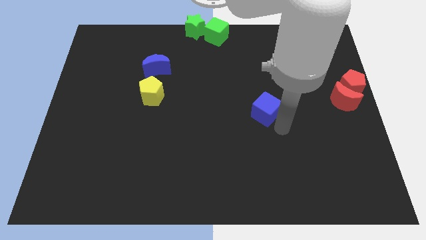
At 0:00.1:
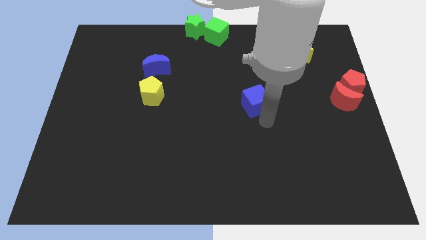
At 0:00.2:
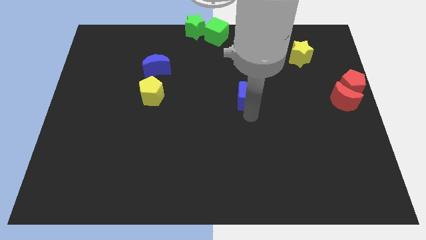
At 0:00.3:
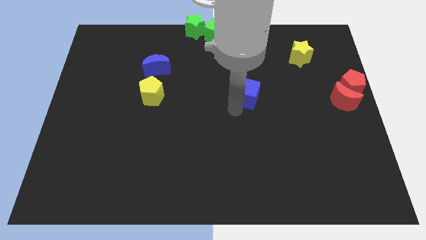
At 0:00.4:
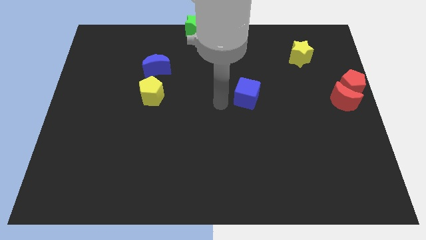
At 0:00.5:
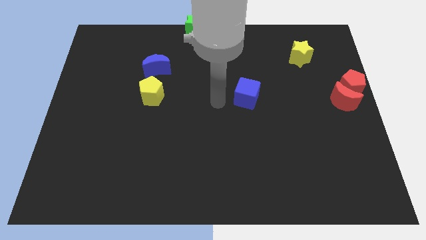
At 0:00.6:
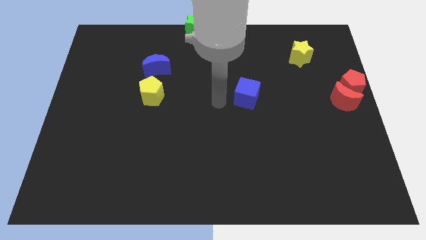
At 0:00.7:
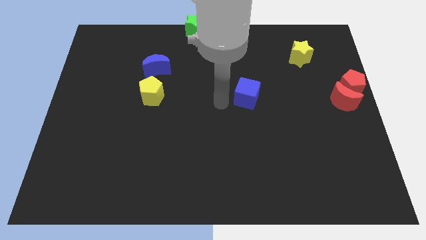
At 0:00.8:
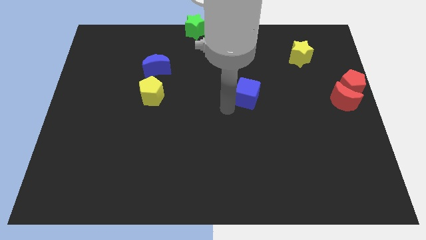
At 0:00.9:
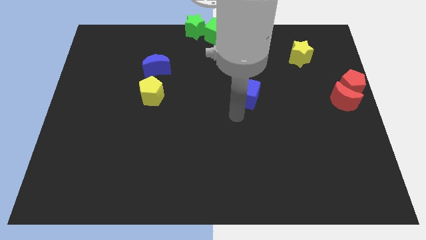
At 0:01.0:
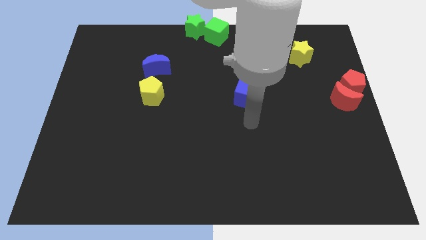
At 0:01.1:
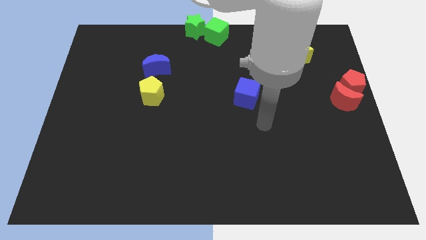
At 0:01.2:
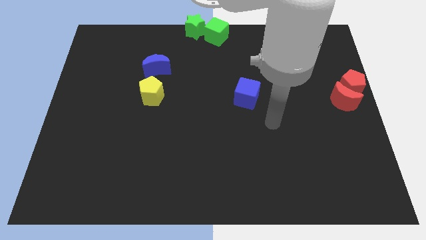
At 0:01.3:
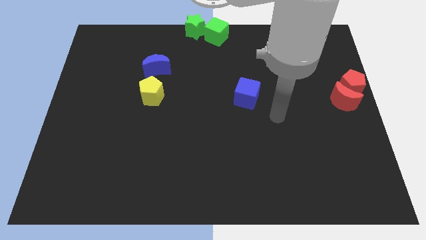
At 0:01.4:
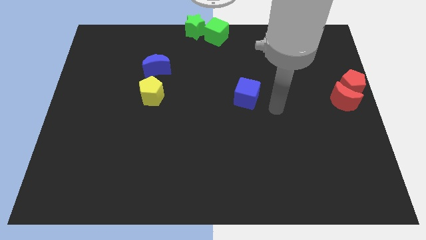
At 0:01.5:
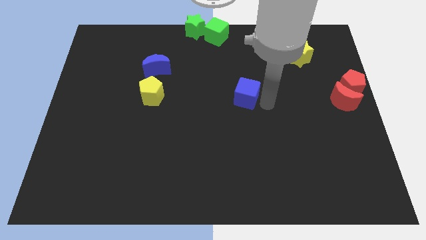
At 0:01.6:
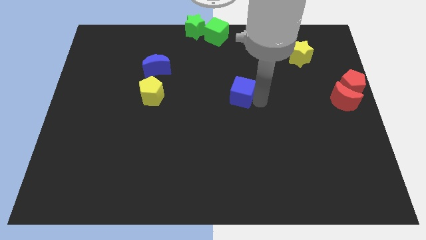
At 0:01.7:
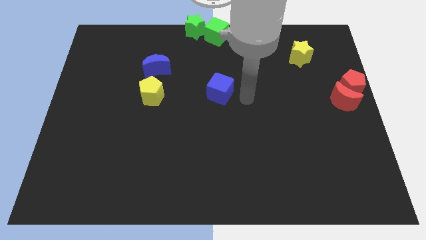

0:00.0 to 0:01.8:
move the blue cube horizontally right to the yellow pentagon

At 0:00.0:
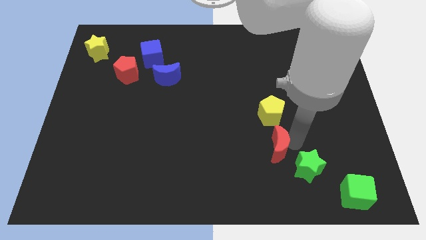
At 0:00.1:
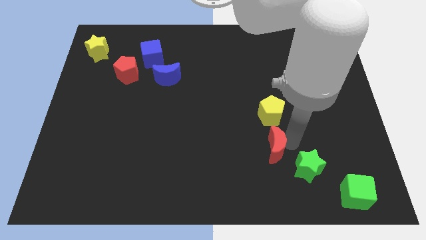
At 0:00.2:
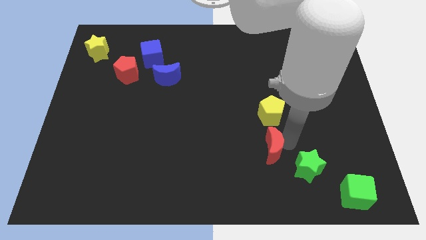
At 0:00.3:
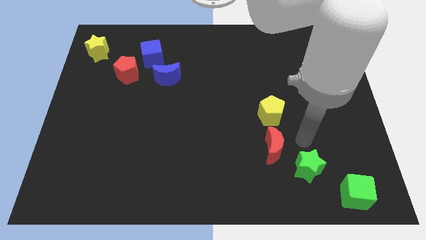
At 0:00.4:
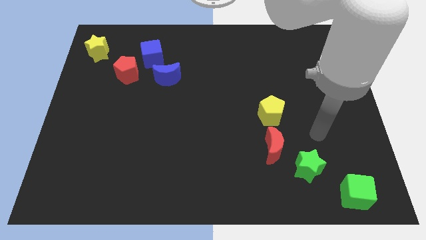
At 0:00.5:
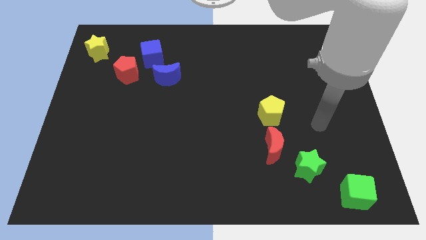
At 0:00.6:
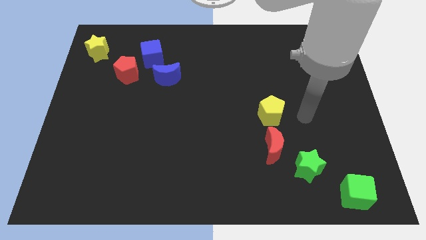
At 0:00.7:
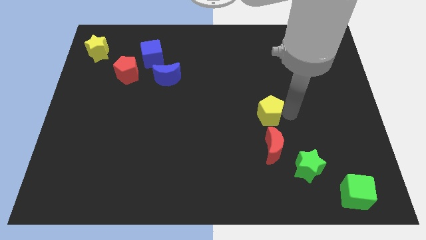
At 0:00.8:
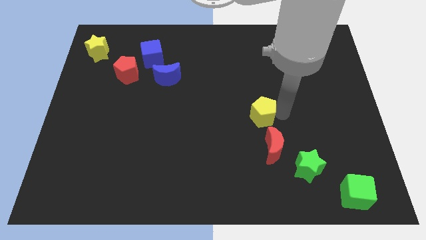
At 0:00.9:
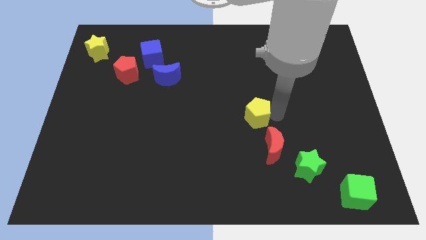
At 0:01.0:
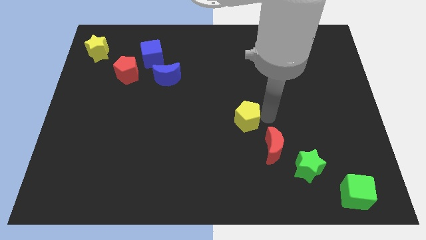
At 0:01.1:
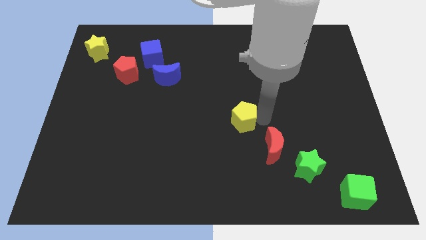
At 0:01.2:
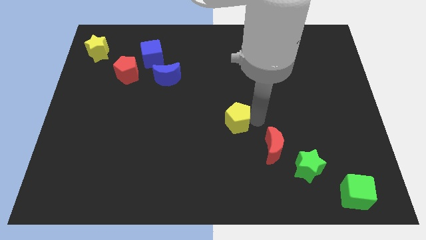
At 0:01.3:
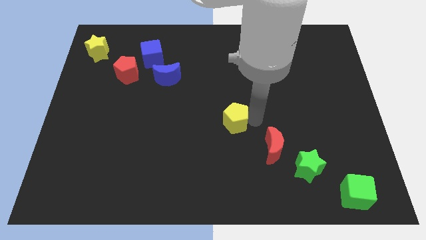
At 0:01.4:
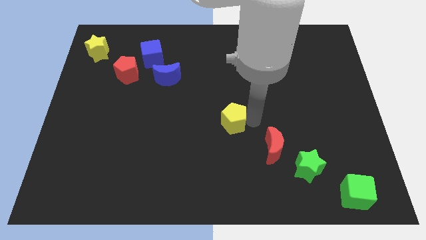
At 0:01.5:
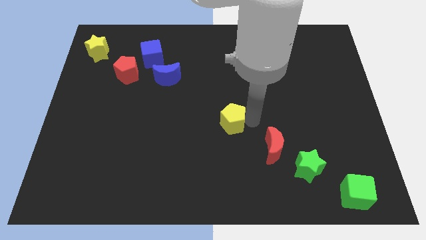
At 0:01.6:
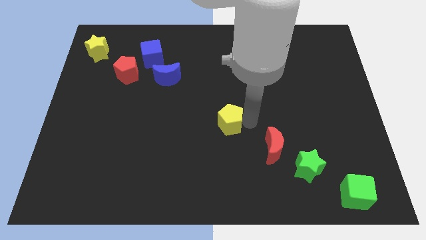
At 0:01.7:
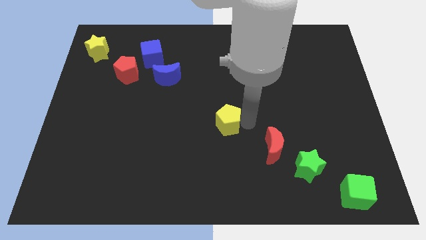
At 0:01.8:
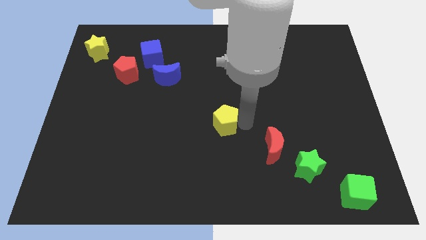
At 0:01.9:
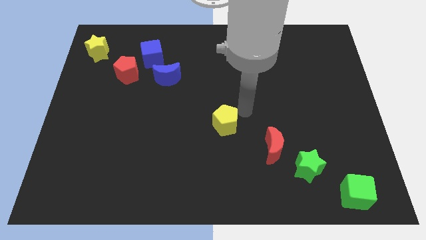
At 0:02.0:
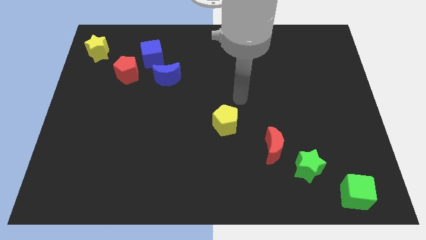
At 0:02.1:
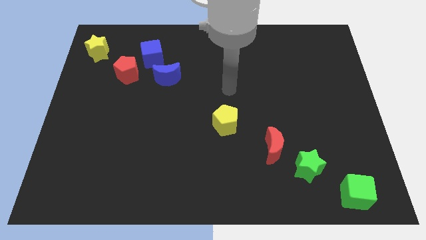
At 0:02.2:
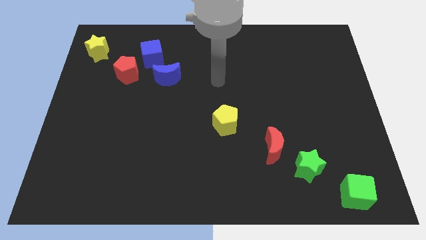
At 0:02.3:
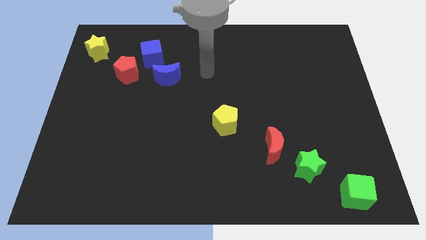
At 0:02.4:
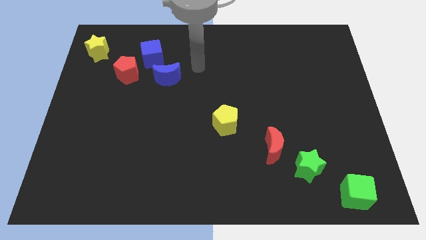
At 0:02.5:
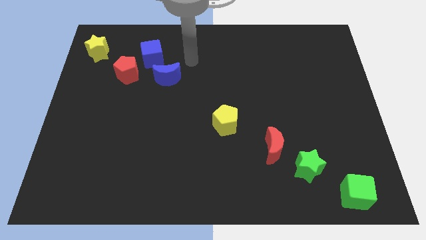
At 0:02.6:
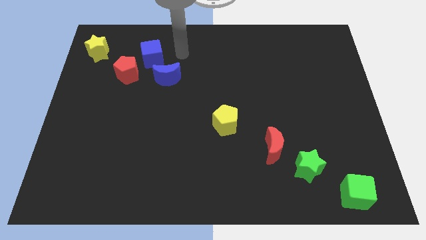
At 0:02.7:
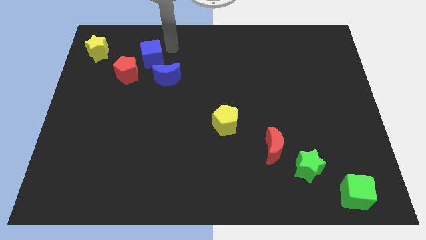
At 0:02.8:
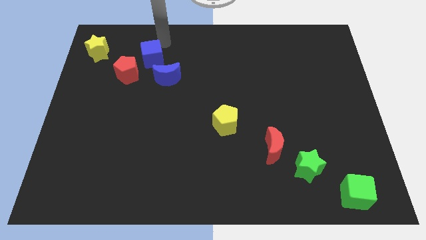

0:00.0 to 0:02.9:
push the yellow pentagon to the center

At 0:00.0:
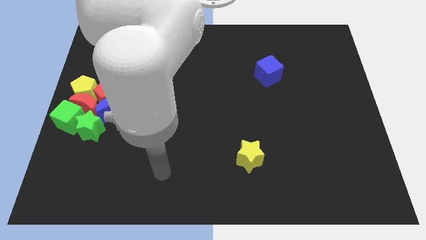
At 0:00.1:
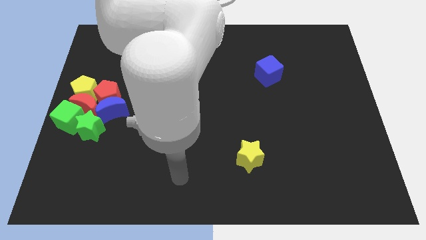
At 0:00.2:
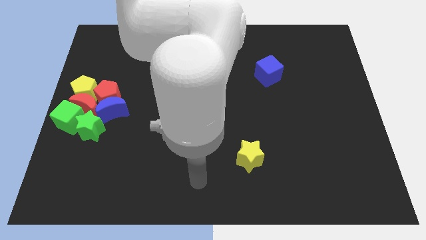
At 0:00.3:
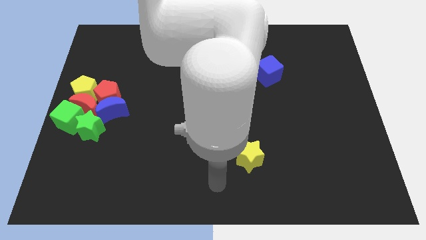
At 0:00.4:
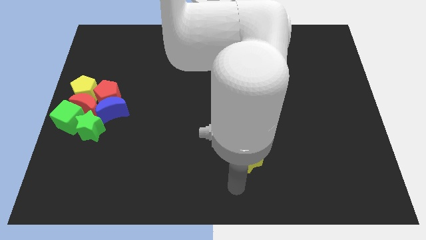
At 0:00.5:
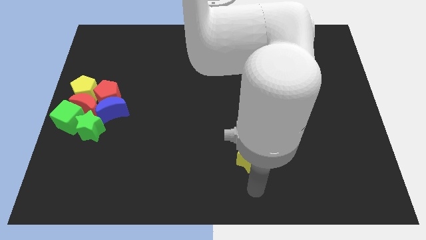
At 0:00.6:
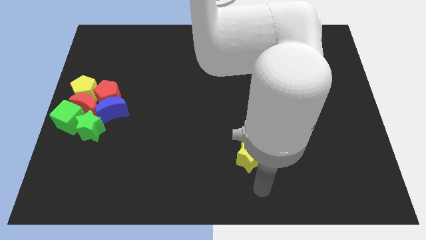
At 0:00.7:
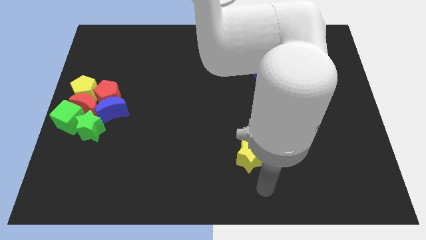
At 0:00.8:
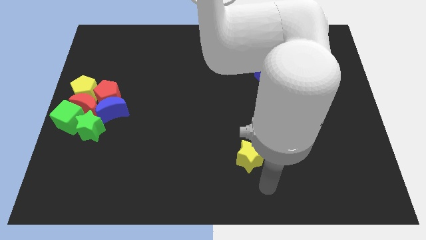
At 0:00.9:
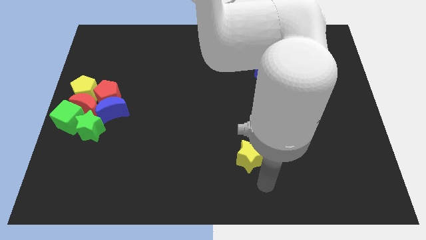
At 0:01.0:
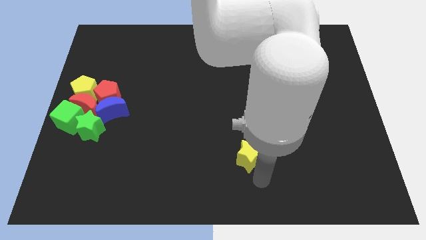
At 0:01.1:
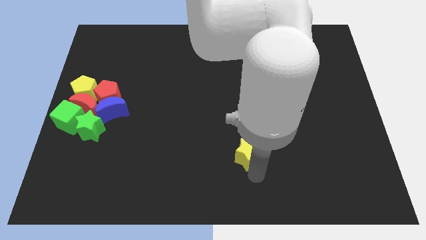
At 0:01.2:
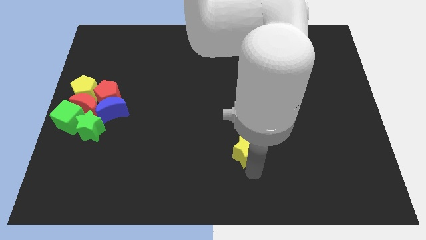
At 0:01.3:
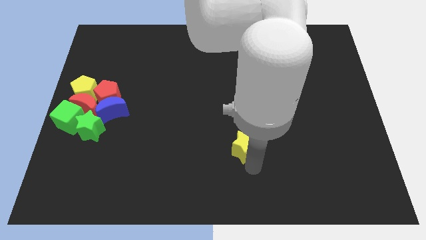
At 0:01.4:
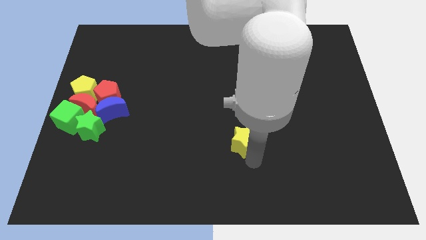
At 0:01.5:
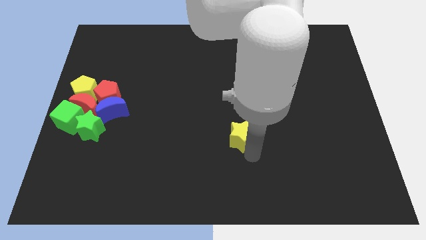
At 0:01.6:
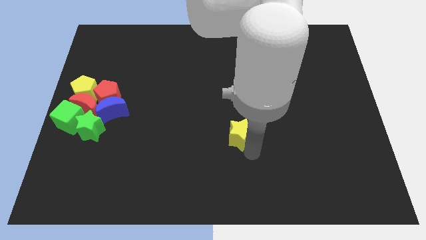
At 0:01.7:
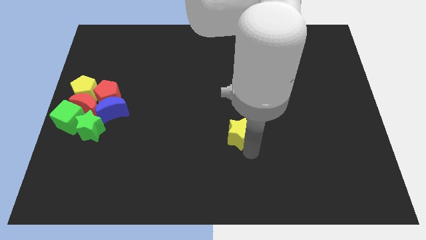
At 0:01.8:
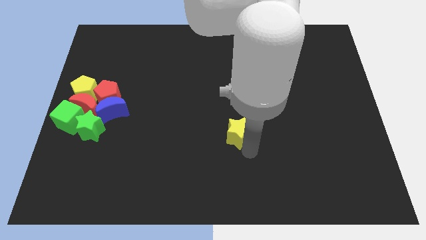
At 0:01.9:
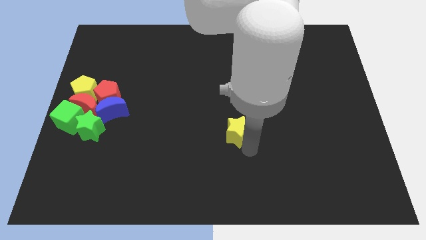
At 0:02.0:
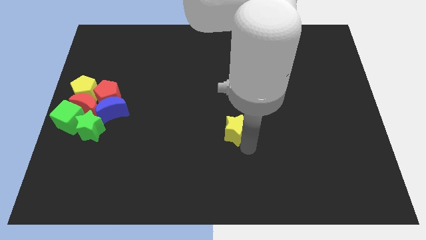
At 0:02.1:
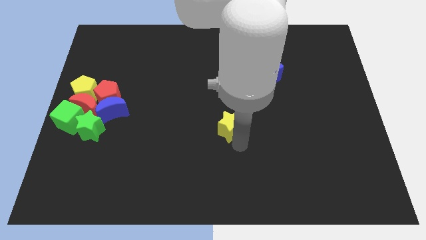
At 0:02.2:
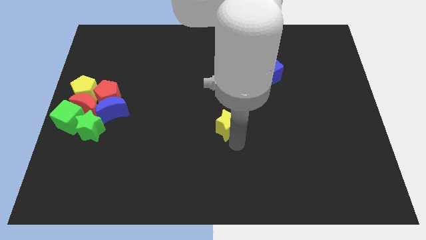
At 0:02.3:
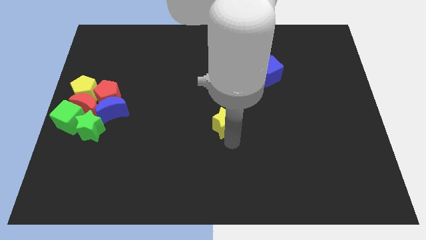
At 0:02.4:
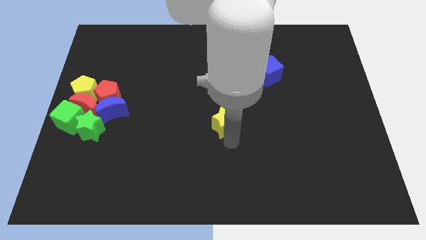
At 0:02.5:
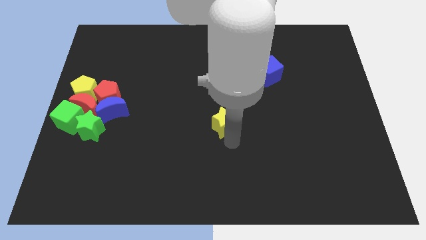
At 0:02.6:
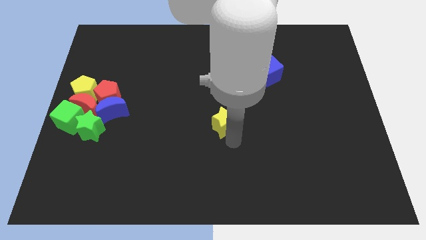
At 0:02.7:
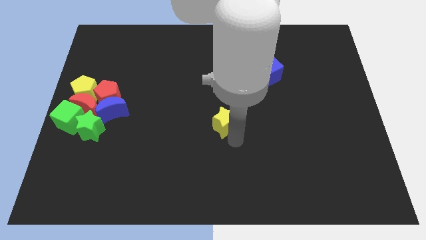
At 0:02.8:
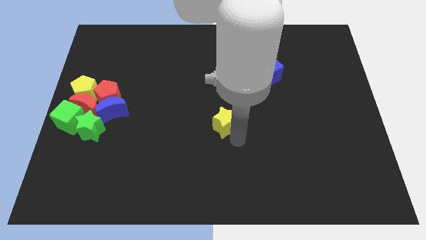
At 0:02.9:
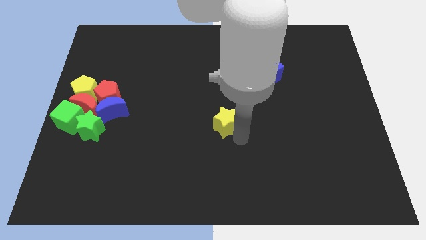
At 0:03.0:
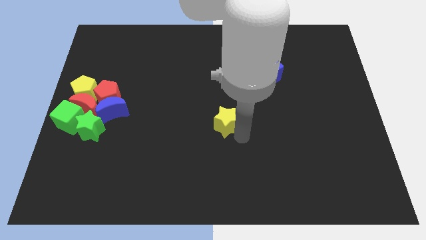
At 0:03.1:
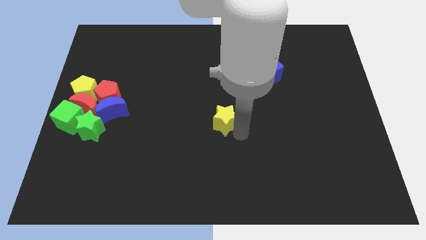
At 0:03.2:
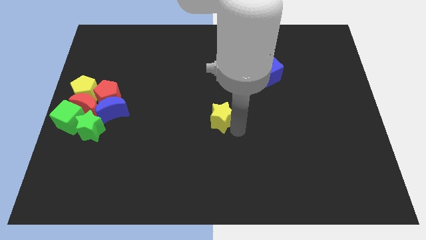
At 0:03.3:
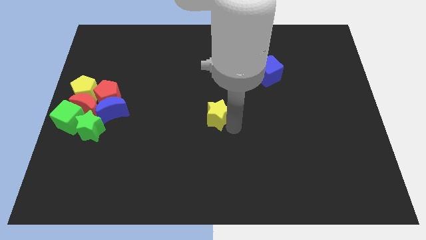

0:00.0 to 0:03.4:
move the yellow star to the center of the board

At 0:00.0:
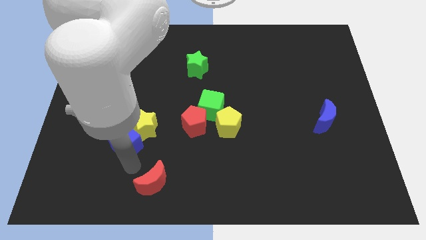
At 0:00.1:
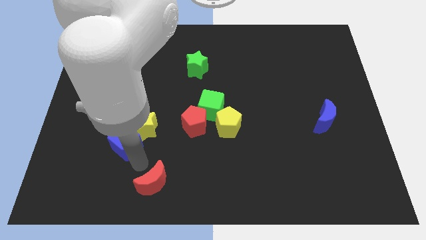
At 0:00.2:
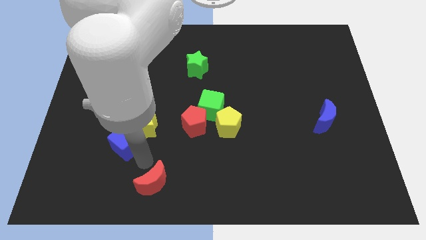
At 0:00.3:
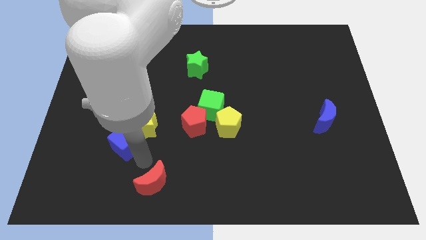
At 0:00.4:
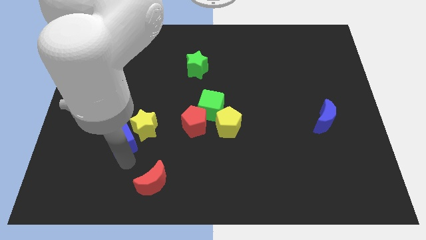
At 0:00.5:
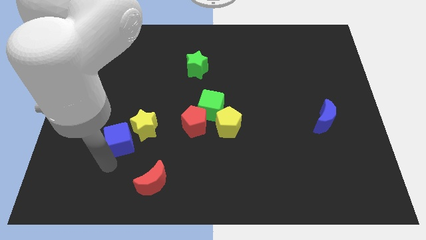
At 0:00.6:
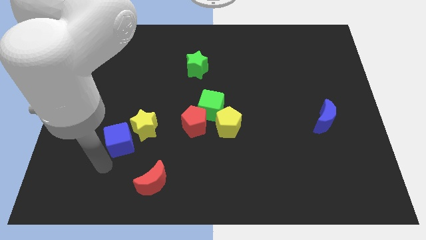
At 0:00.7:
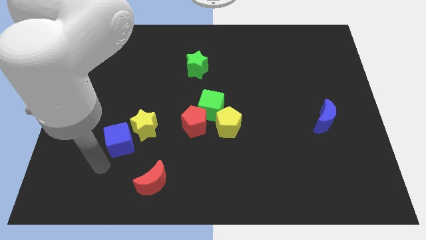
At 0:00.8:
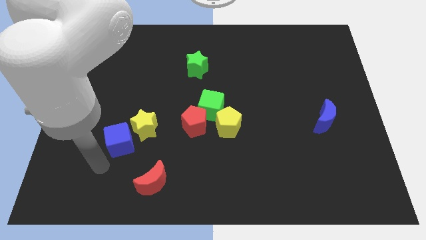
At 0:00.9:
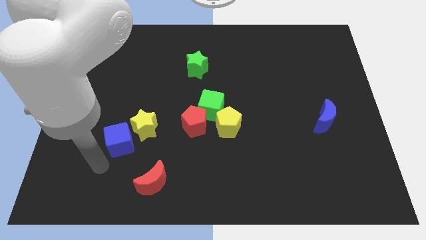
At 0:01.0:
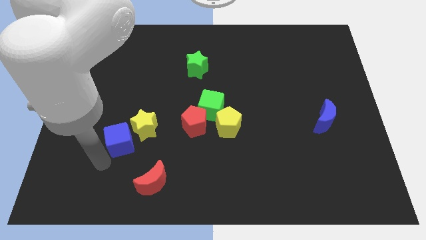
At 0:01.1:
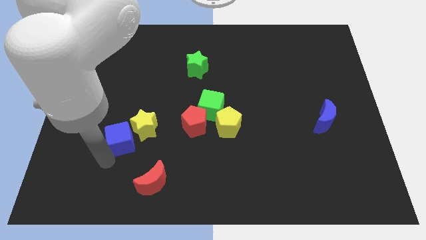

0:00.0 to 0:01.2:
place your arm below the left of blue cube
